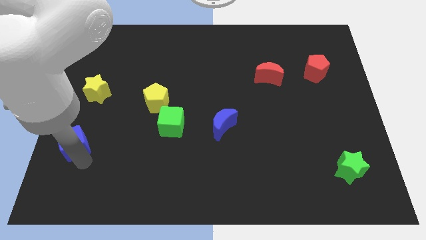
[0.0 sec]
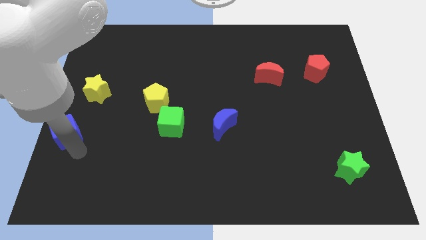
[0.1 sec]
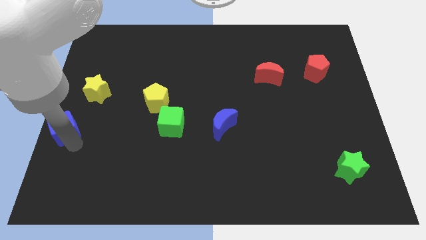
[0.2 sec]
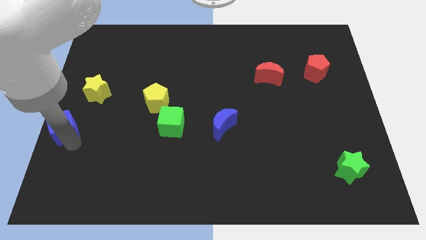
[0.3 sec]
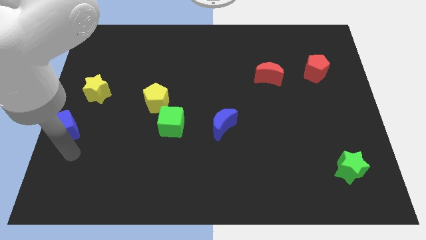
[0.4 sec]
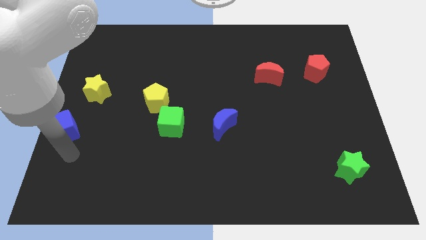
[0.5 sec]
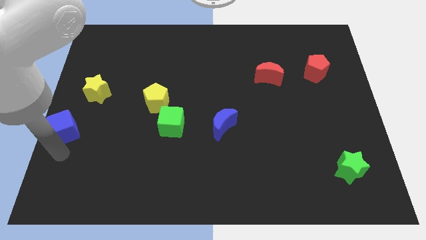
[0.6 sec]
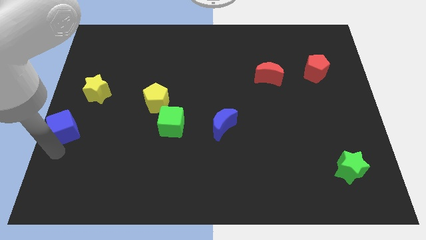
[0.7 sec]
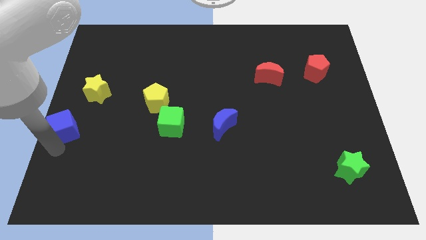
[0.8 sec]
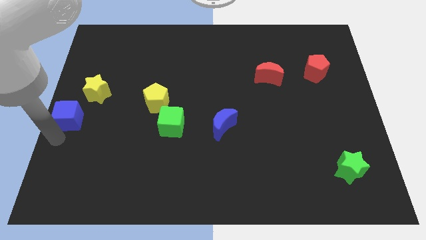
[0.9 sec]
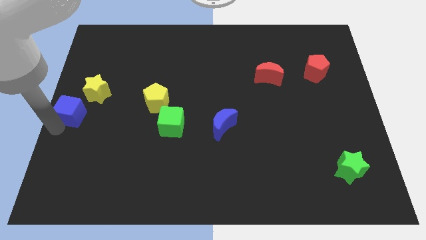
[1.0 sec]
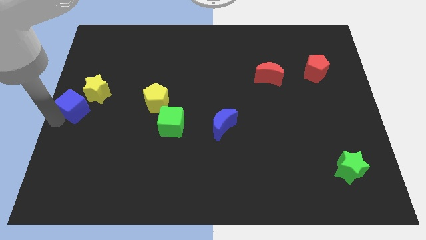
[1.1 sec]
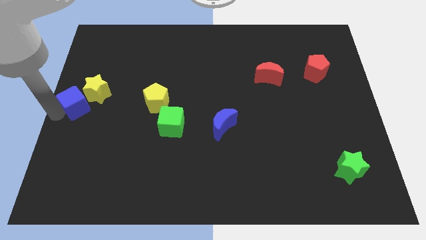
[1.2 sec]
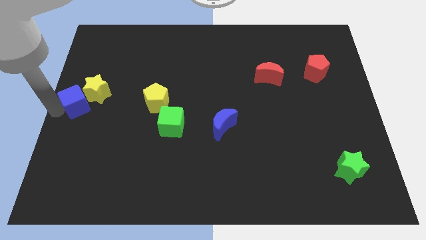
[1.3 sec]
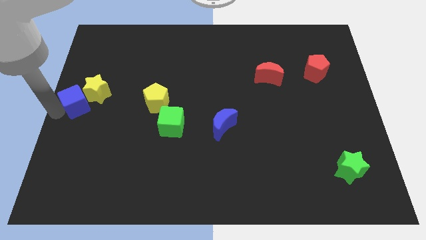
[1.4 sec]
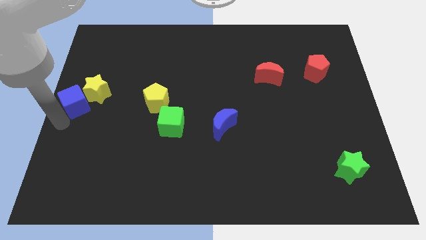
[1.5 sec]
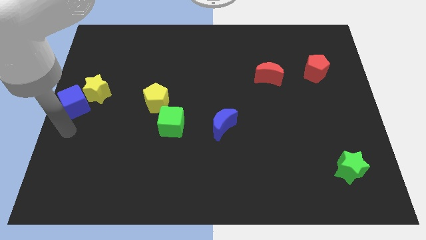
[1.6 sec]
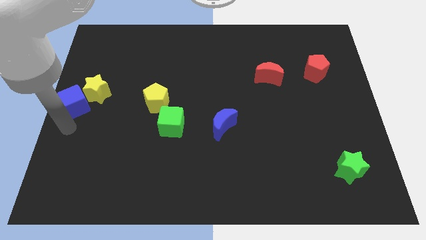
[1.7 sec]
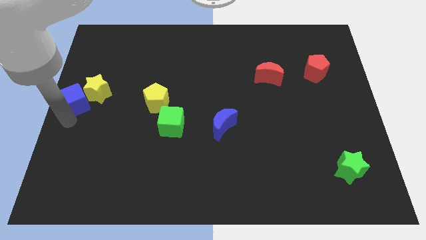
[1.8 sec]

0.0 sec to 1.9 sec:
push the blue cube into the yellow star

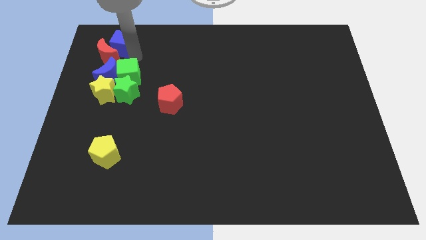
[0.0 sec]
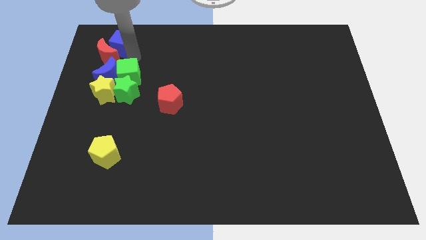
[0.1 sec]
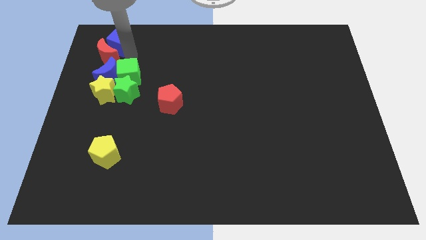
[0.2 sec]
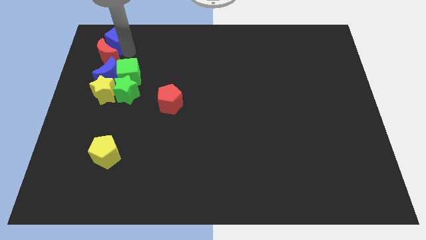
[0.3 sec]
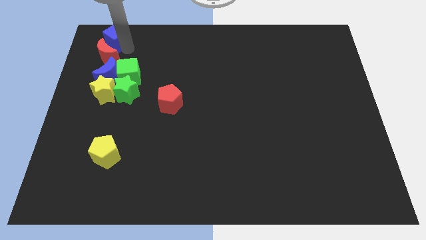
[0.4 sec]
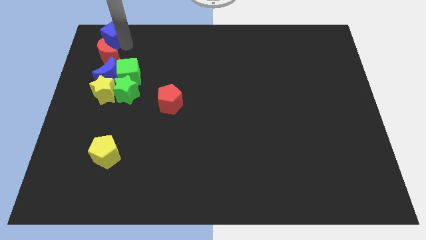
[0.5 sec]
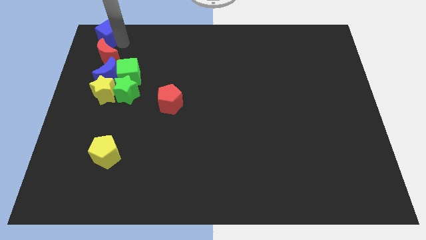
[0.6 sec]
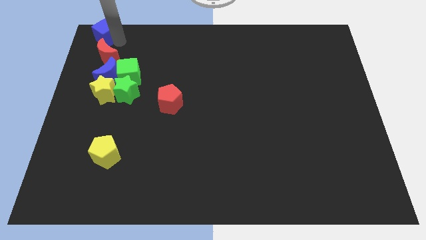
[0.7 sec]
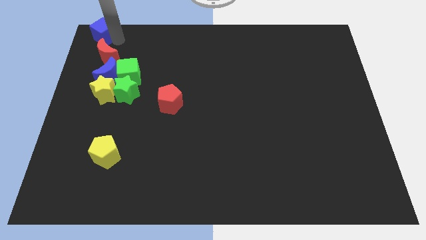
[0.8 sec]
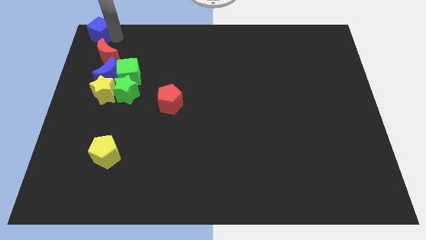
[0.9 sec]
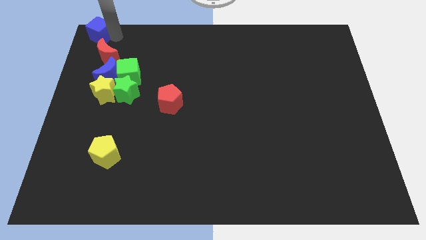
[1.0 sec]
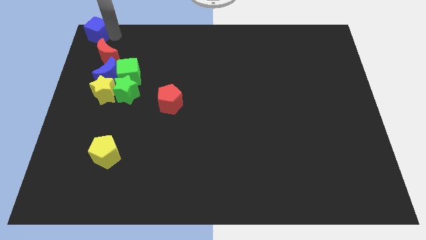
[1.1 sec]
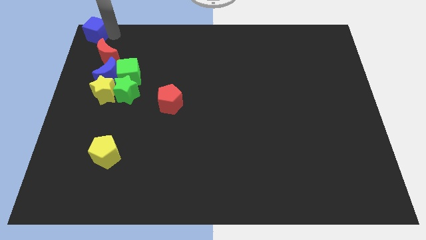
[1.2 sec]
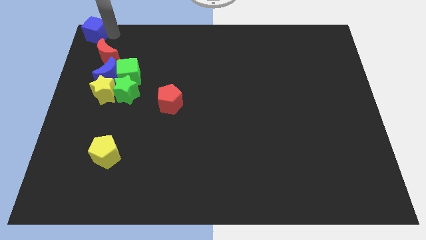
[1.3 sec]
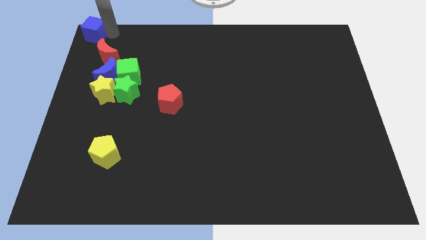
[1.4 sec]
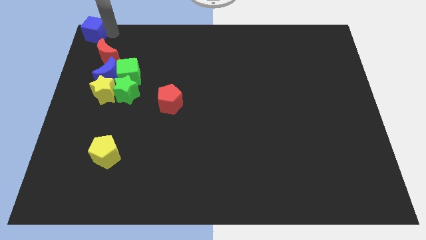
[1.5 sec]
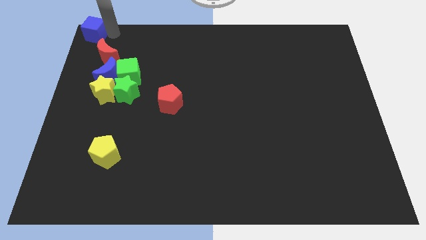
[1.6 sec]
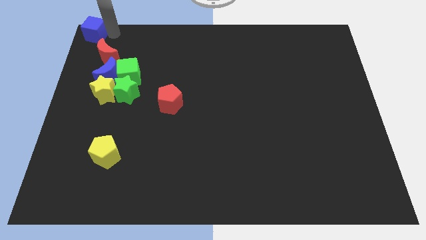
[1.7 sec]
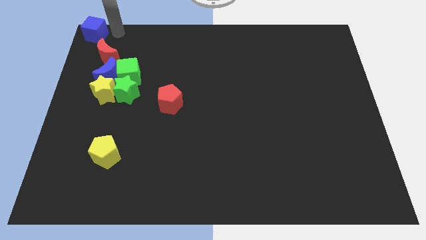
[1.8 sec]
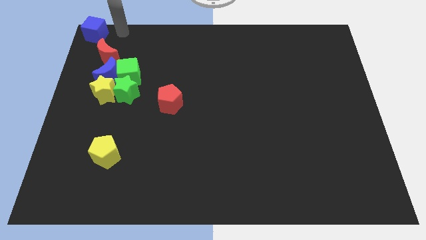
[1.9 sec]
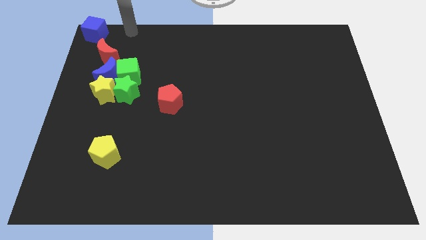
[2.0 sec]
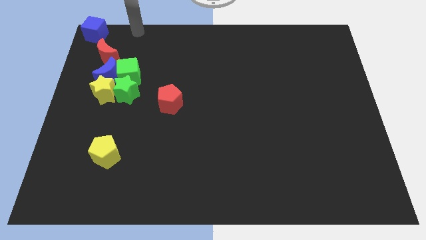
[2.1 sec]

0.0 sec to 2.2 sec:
place blue cube to the top left corner of the board

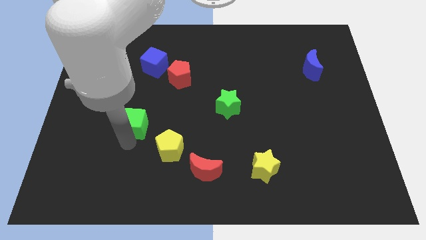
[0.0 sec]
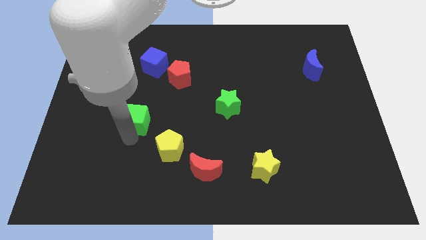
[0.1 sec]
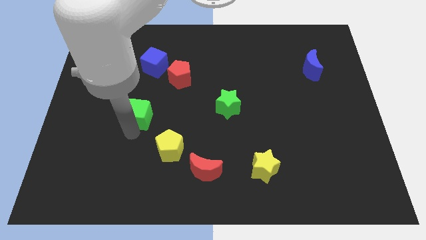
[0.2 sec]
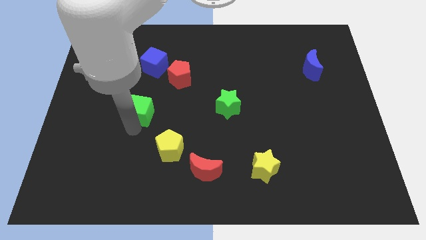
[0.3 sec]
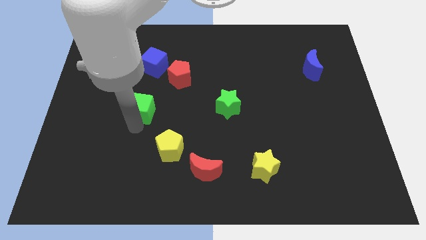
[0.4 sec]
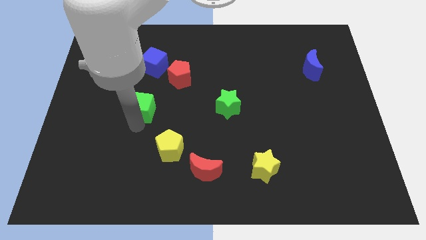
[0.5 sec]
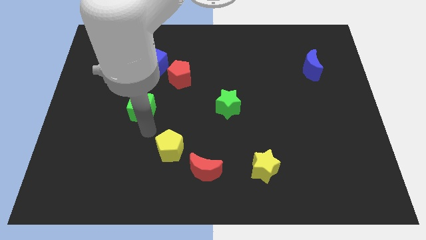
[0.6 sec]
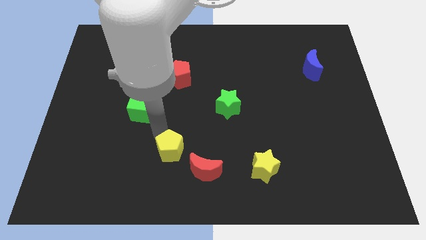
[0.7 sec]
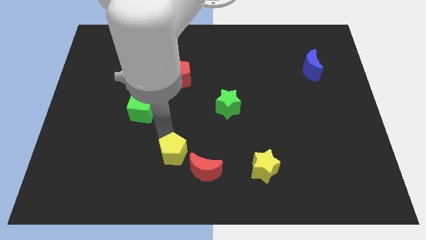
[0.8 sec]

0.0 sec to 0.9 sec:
push blue cube slightly upwards

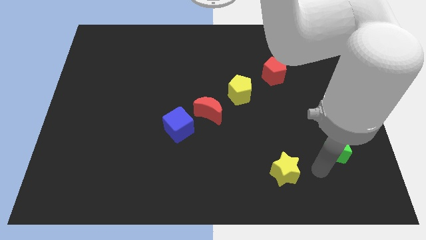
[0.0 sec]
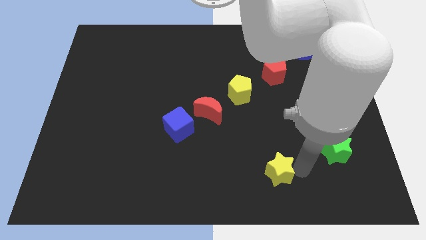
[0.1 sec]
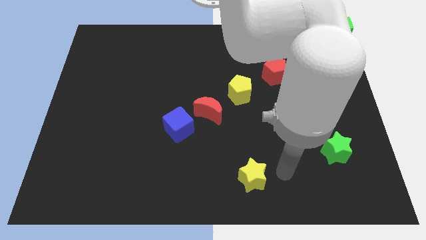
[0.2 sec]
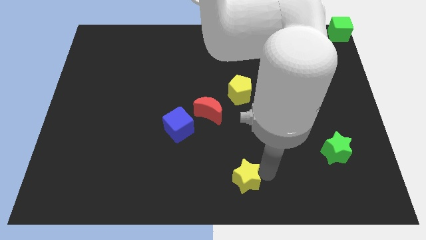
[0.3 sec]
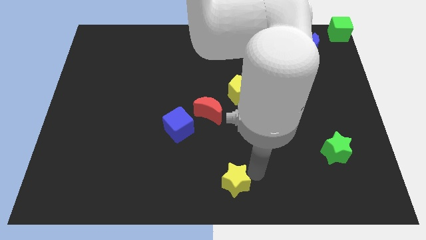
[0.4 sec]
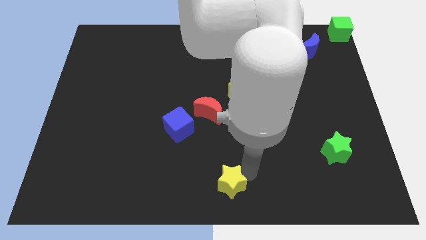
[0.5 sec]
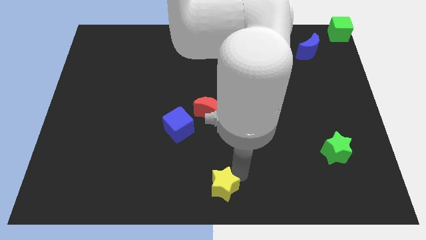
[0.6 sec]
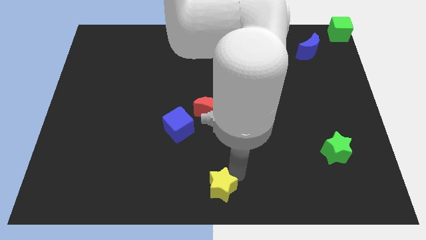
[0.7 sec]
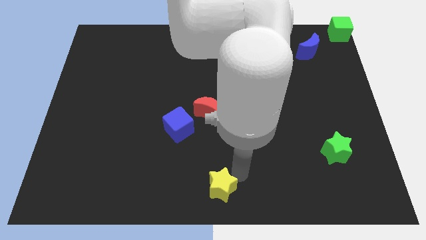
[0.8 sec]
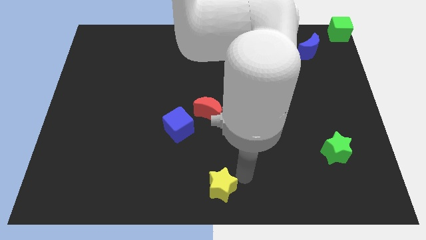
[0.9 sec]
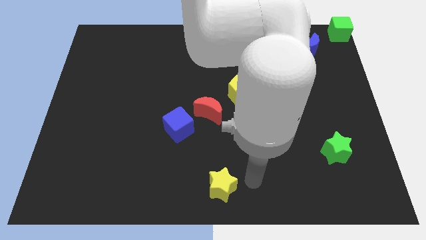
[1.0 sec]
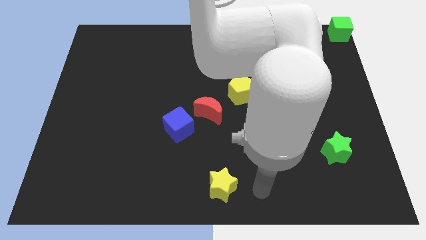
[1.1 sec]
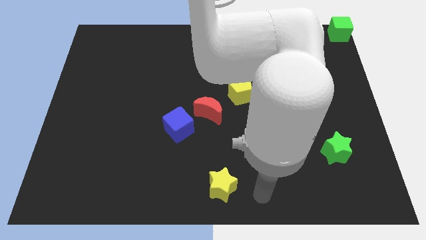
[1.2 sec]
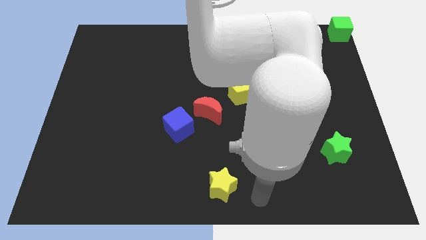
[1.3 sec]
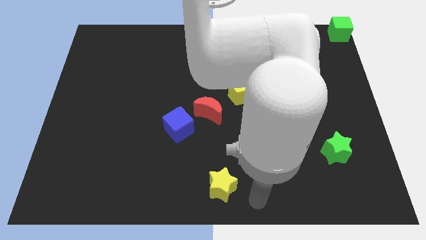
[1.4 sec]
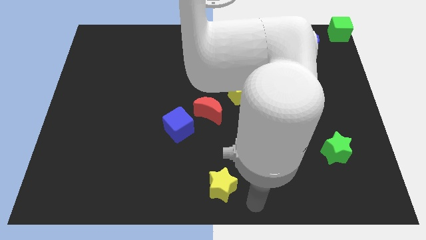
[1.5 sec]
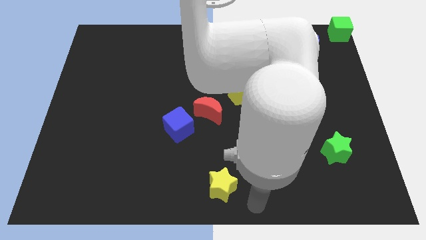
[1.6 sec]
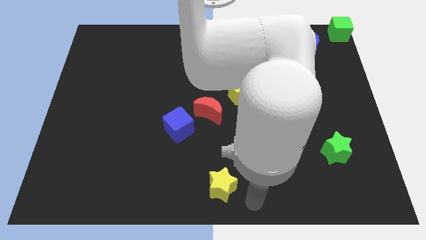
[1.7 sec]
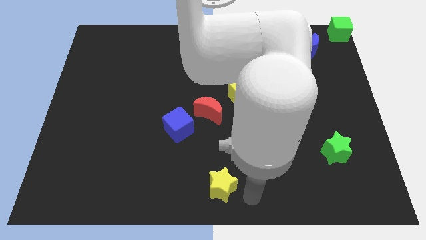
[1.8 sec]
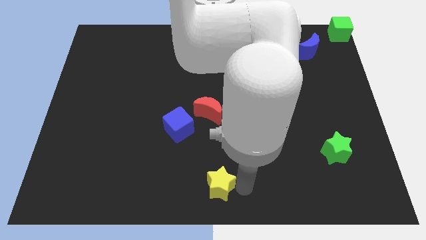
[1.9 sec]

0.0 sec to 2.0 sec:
place the yellow star diagonal to the blue cube

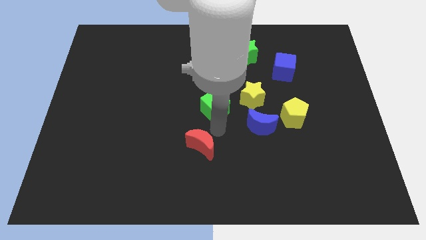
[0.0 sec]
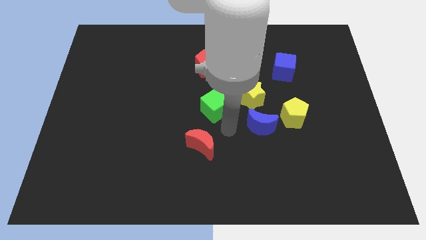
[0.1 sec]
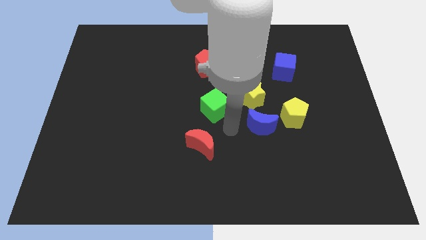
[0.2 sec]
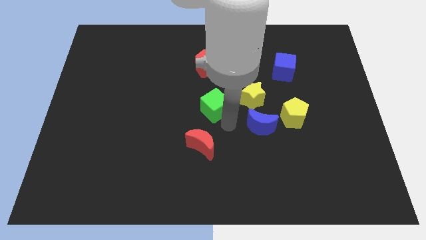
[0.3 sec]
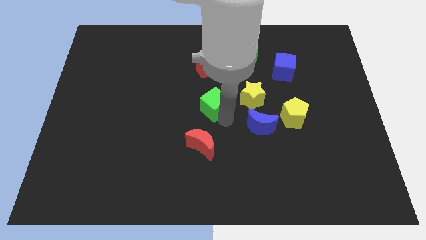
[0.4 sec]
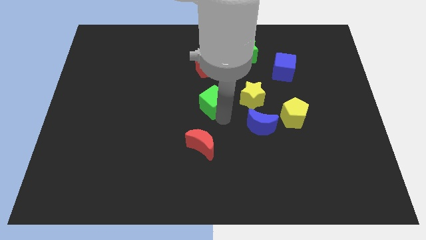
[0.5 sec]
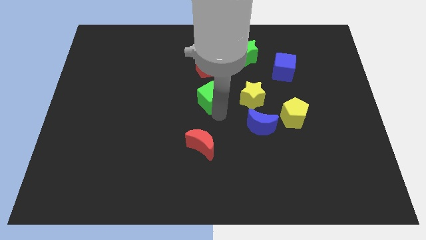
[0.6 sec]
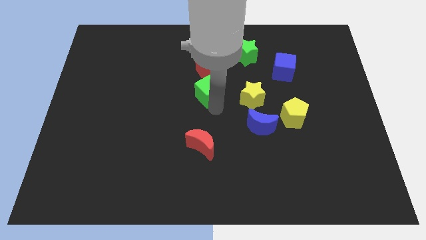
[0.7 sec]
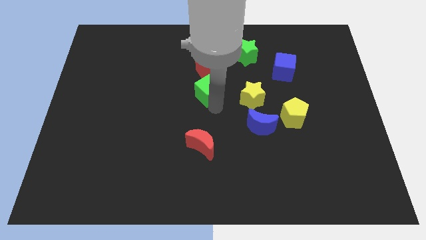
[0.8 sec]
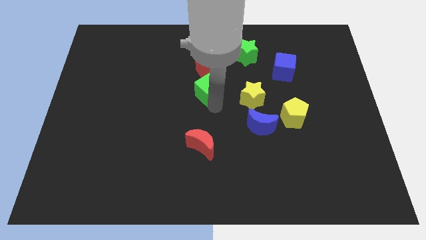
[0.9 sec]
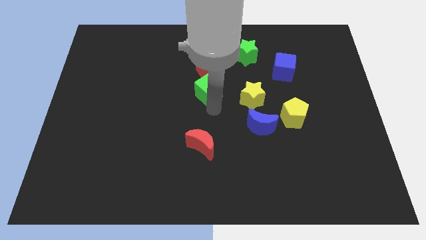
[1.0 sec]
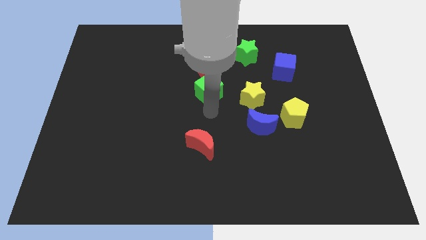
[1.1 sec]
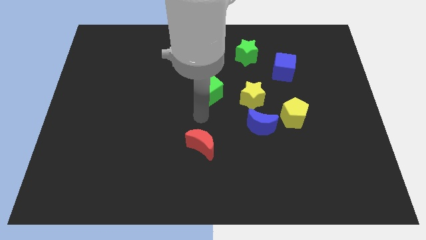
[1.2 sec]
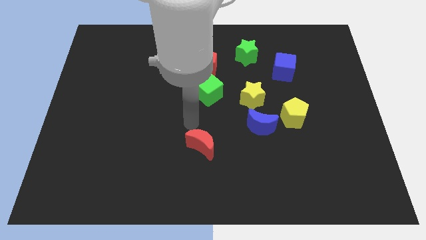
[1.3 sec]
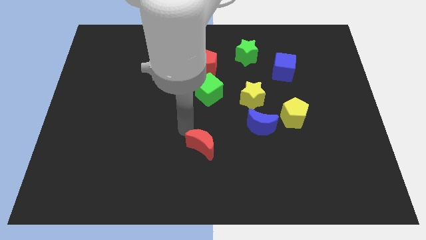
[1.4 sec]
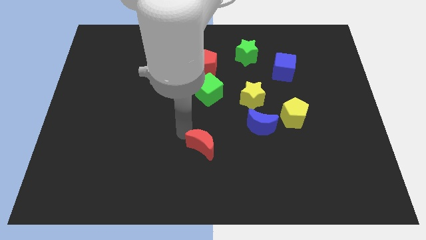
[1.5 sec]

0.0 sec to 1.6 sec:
push the green cube into the red pentagon

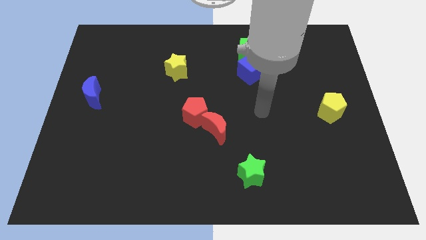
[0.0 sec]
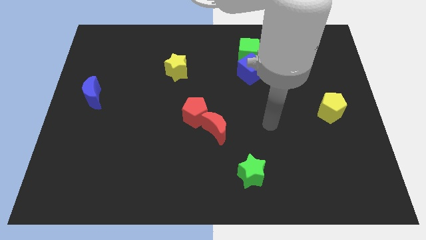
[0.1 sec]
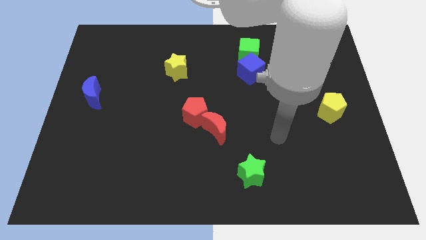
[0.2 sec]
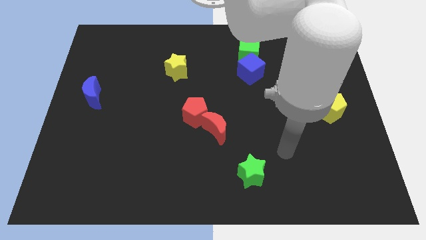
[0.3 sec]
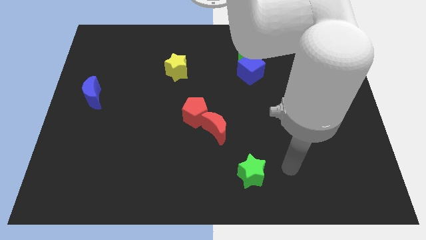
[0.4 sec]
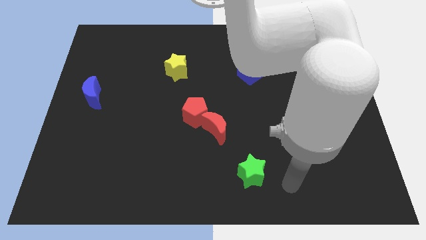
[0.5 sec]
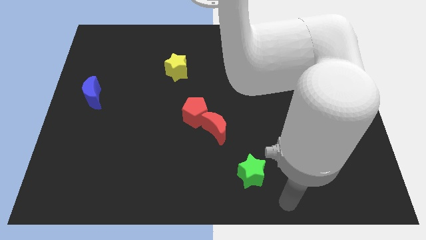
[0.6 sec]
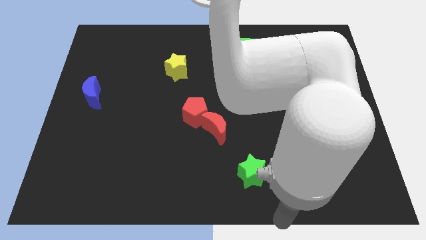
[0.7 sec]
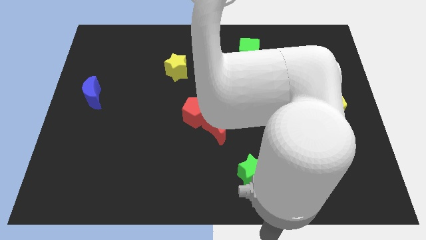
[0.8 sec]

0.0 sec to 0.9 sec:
move the arm towards the bottom of the board
